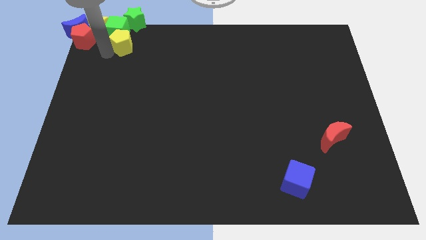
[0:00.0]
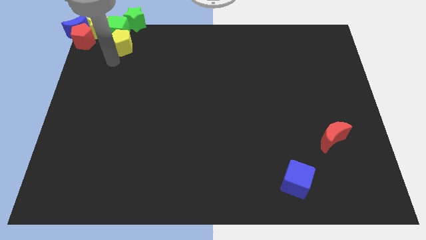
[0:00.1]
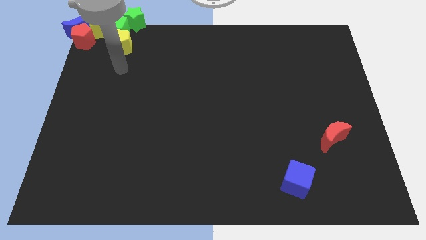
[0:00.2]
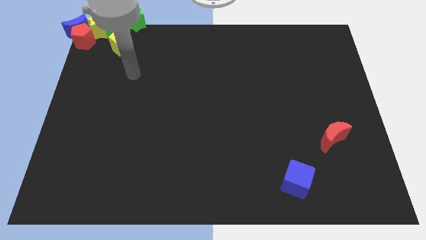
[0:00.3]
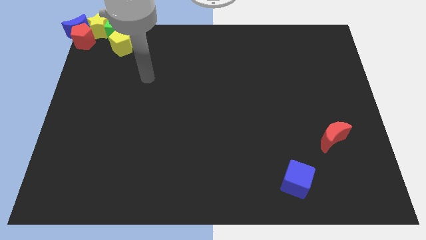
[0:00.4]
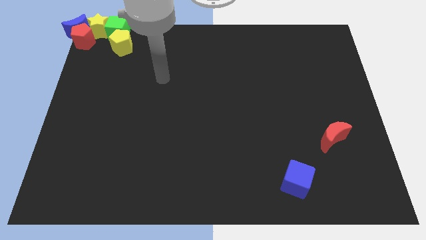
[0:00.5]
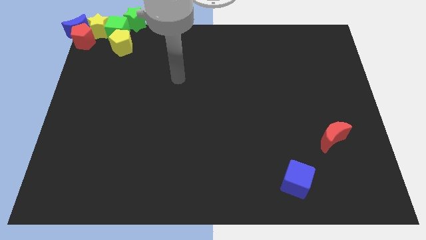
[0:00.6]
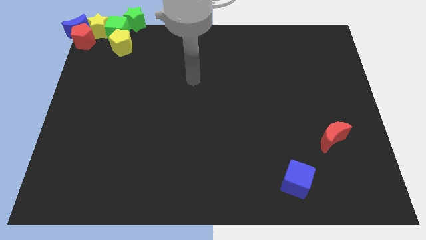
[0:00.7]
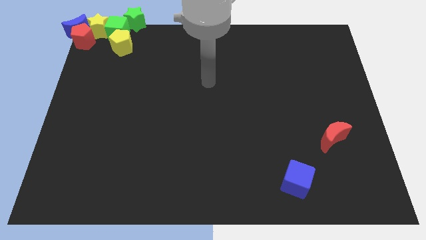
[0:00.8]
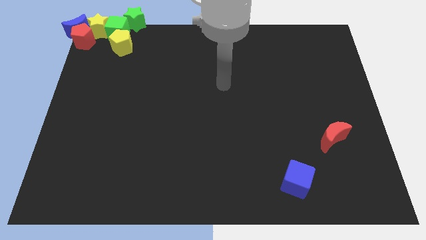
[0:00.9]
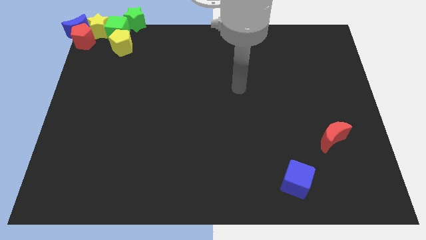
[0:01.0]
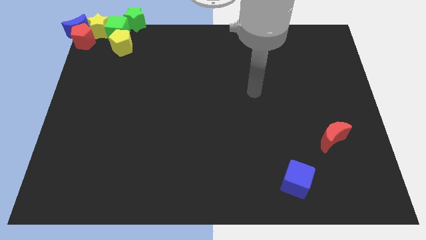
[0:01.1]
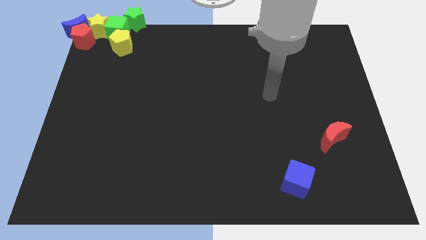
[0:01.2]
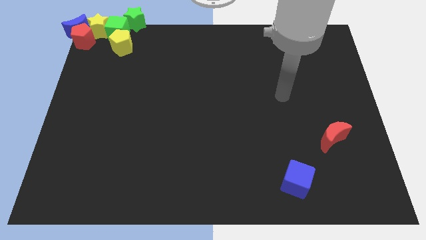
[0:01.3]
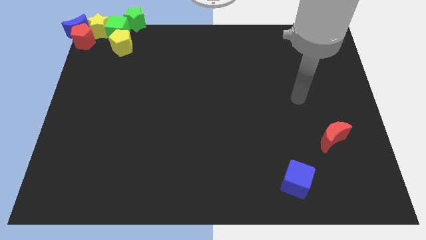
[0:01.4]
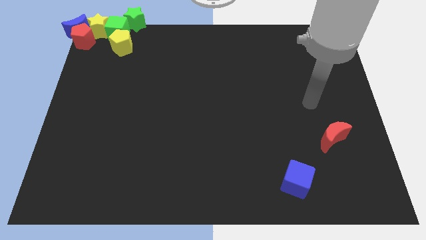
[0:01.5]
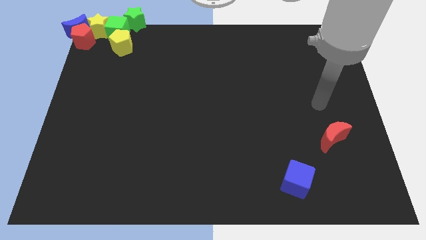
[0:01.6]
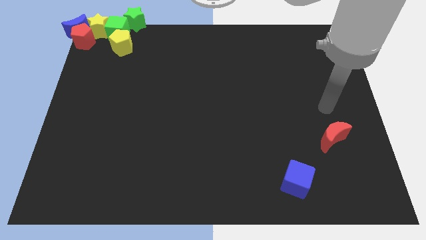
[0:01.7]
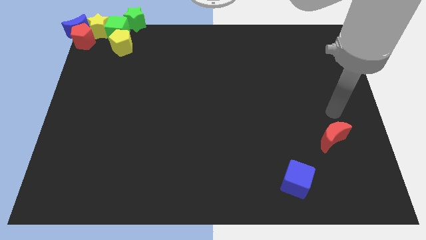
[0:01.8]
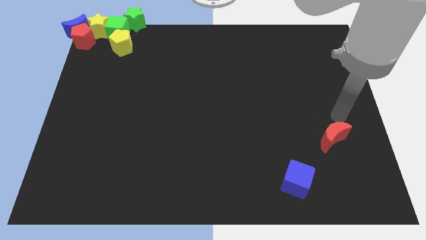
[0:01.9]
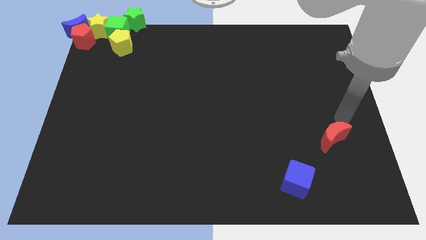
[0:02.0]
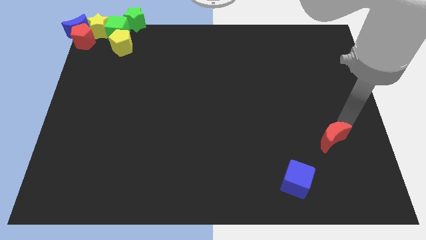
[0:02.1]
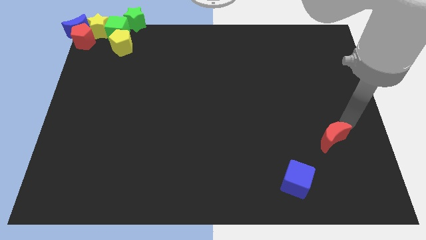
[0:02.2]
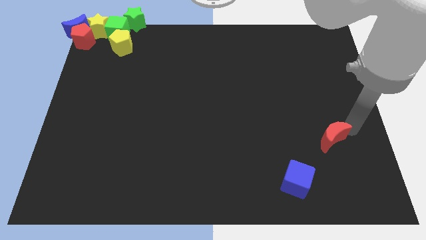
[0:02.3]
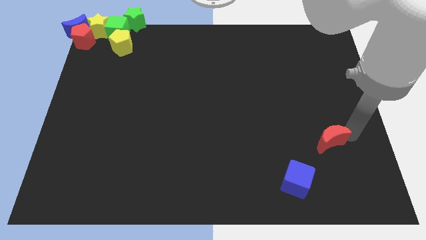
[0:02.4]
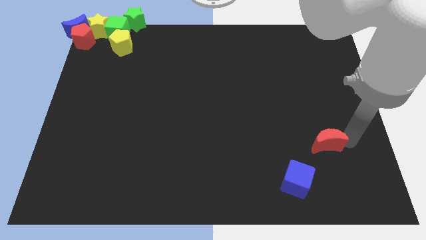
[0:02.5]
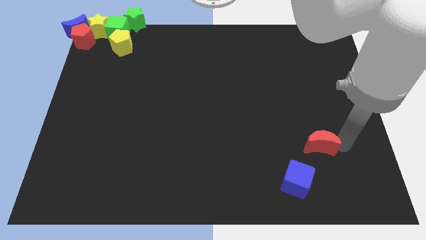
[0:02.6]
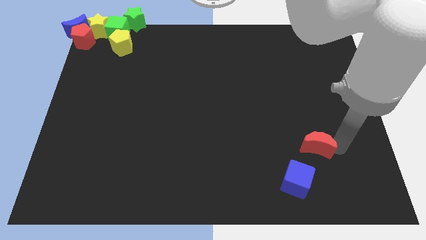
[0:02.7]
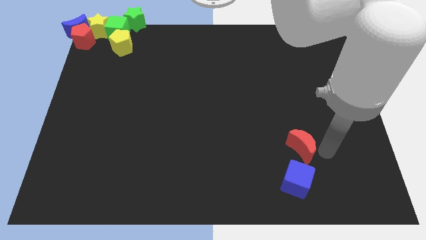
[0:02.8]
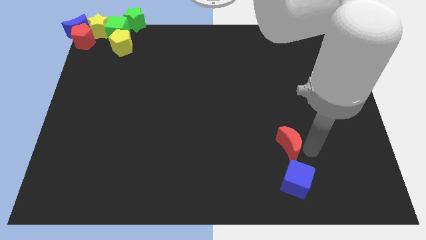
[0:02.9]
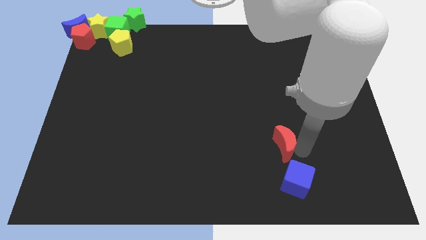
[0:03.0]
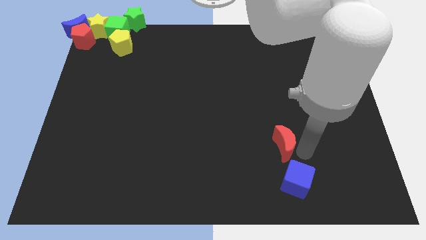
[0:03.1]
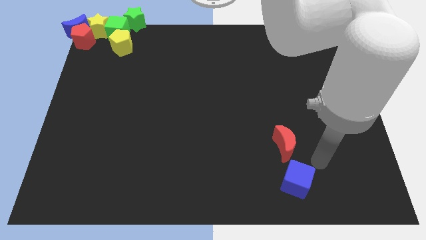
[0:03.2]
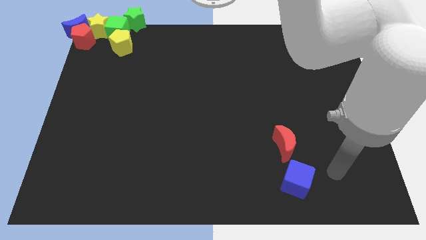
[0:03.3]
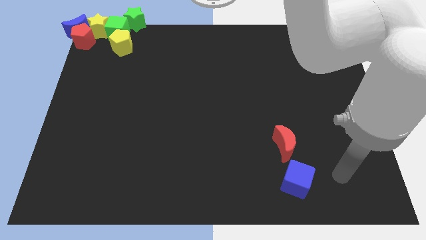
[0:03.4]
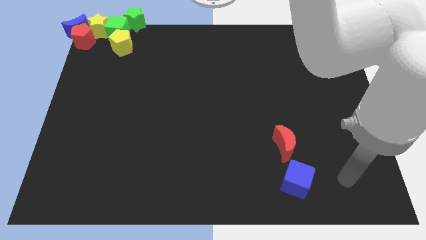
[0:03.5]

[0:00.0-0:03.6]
place the red moon at the top left side of blue cube

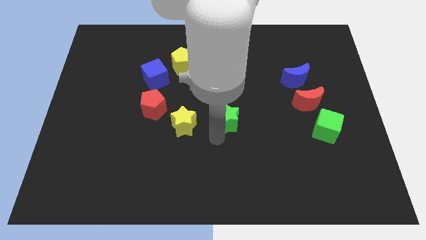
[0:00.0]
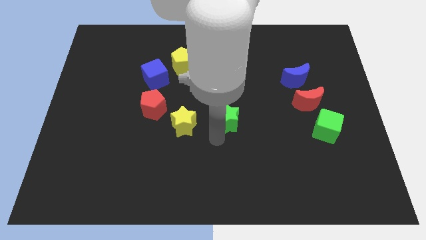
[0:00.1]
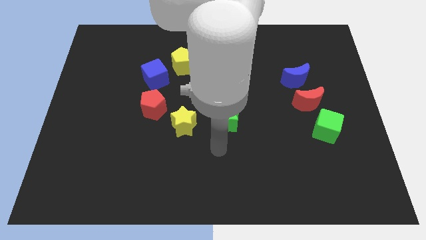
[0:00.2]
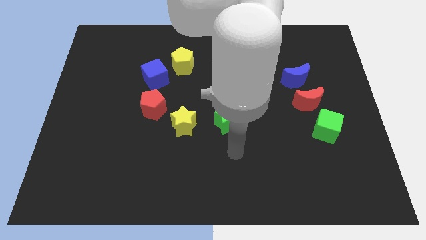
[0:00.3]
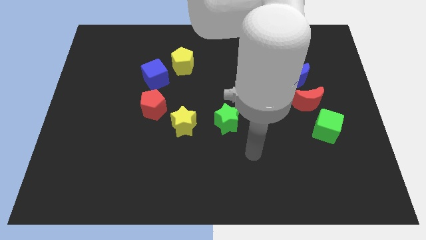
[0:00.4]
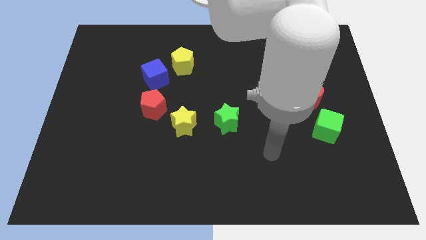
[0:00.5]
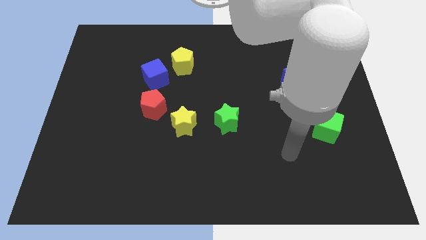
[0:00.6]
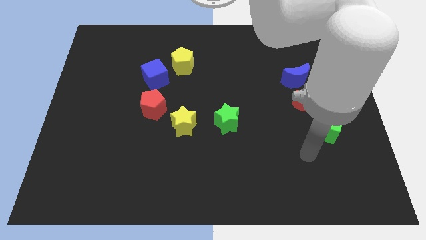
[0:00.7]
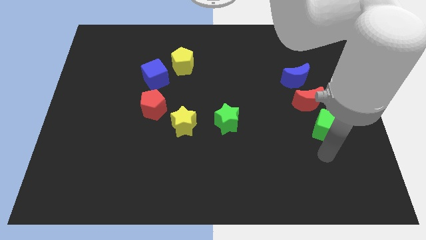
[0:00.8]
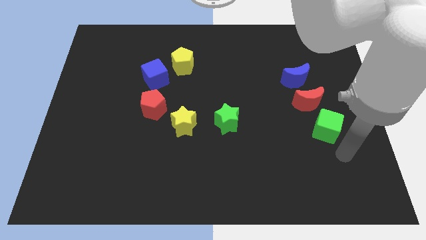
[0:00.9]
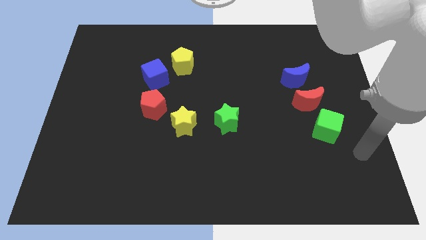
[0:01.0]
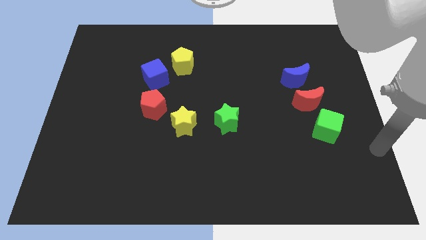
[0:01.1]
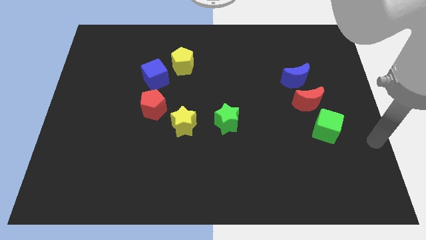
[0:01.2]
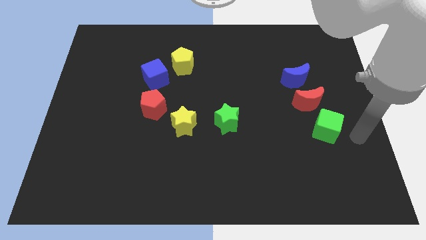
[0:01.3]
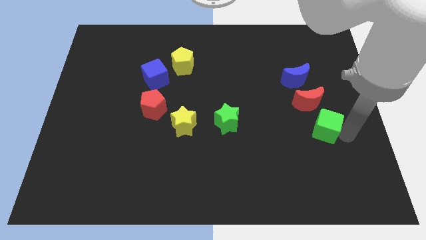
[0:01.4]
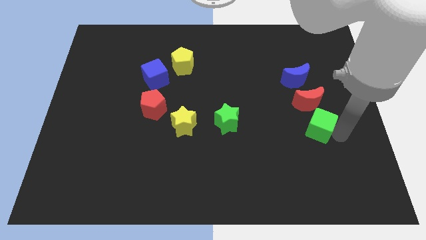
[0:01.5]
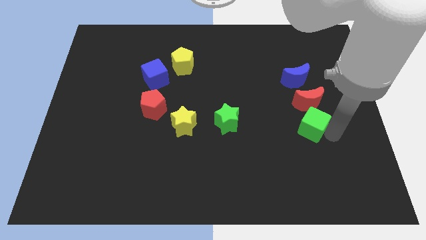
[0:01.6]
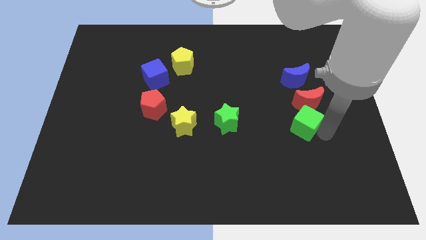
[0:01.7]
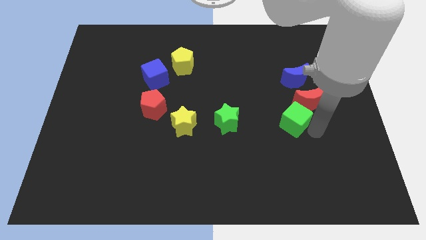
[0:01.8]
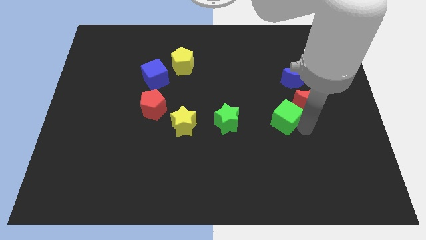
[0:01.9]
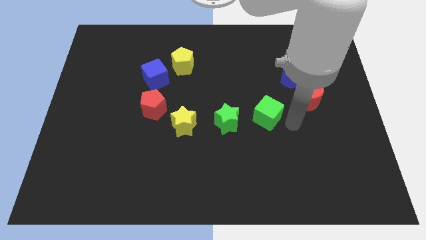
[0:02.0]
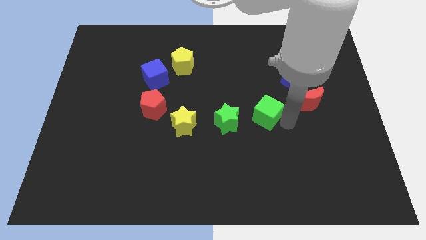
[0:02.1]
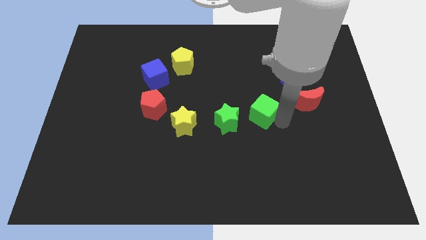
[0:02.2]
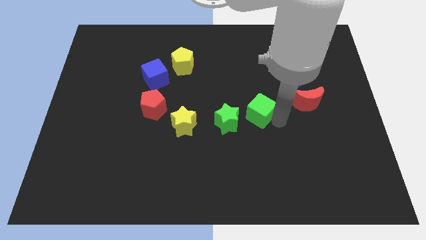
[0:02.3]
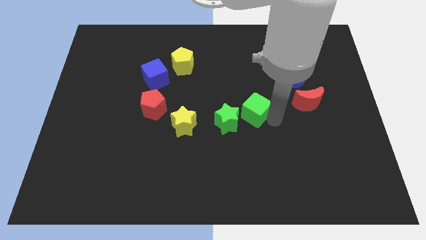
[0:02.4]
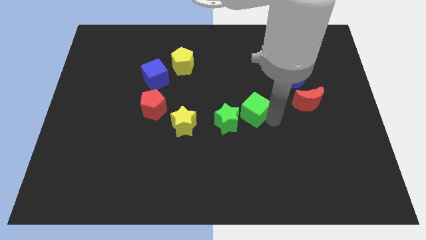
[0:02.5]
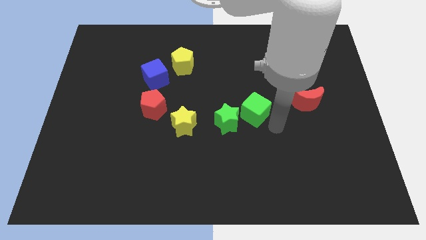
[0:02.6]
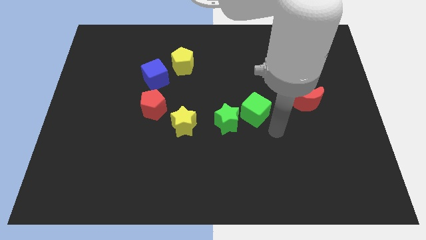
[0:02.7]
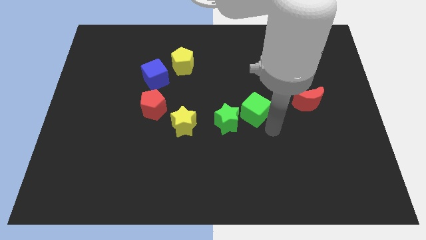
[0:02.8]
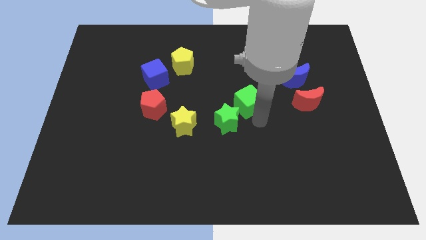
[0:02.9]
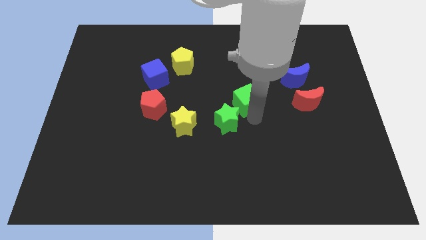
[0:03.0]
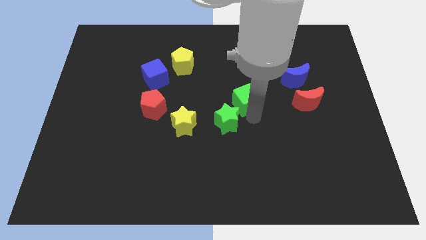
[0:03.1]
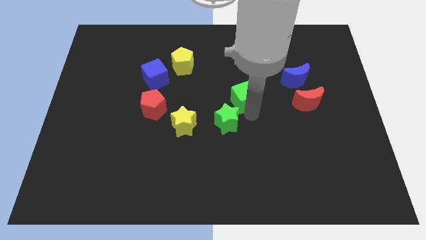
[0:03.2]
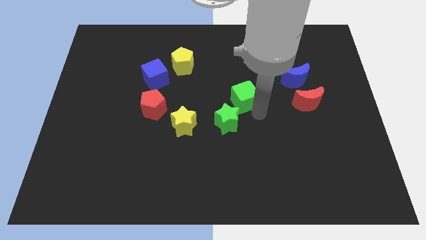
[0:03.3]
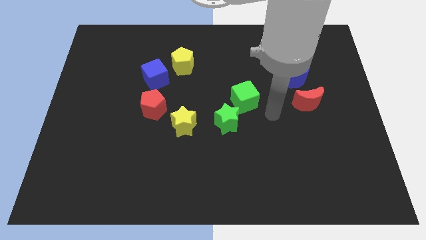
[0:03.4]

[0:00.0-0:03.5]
move the green cube parallel to the red crescent

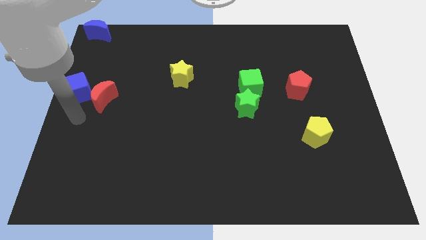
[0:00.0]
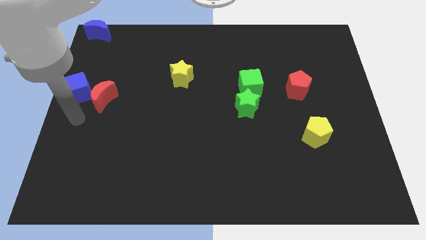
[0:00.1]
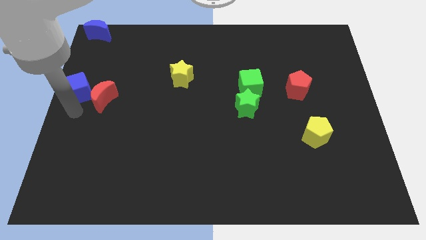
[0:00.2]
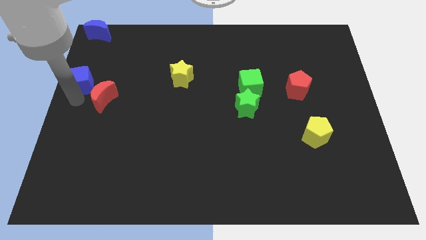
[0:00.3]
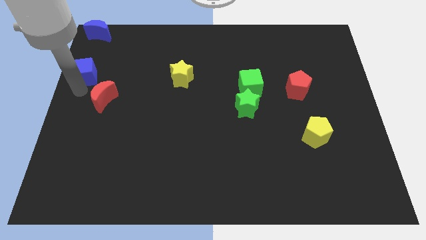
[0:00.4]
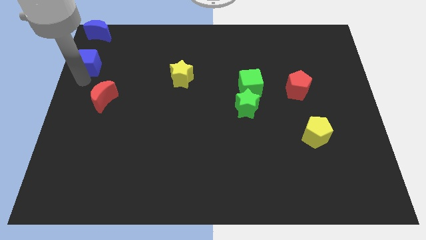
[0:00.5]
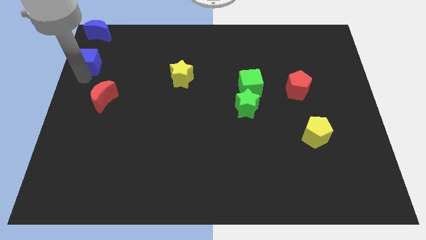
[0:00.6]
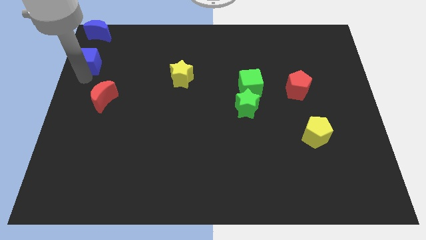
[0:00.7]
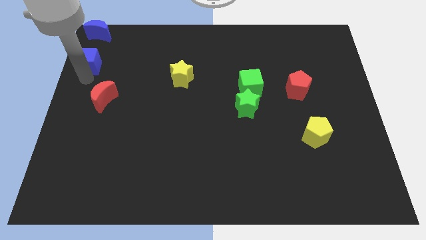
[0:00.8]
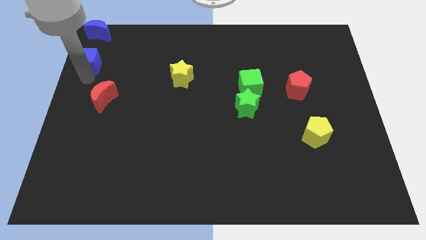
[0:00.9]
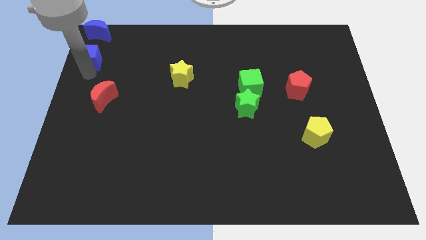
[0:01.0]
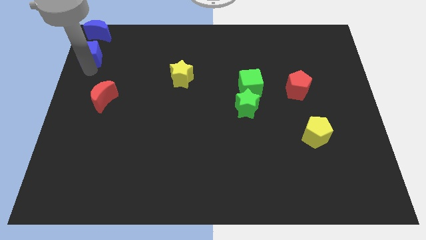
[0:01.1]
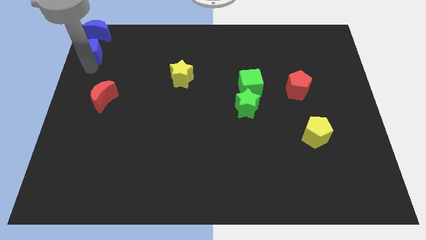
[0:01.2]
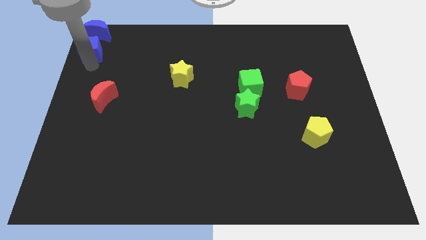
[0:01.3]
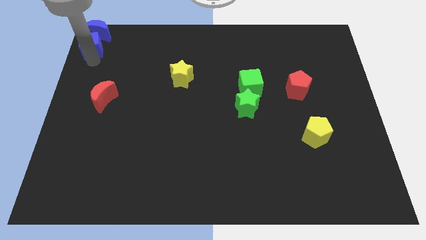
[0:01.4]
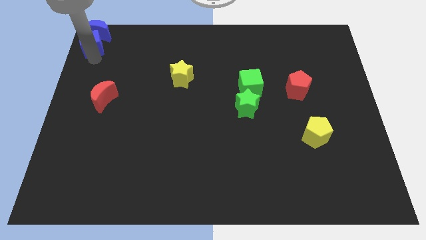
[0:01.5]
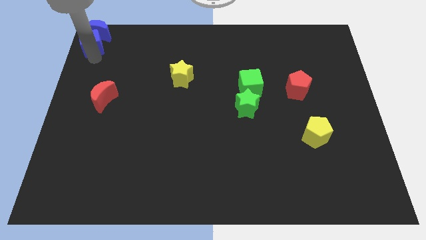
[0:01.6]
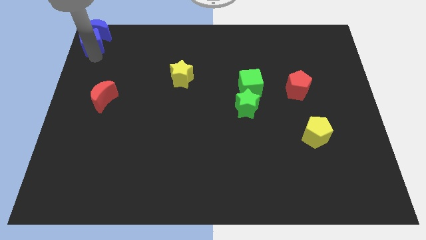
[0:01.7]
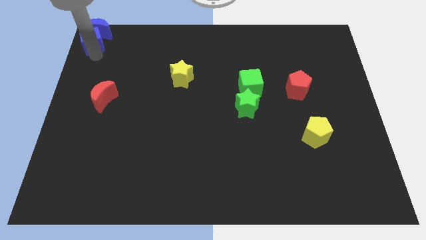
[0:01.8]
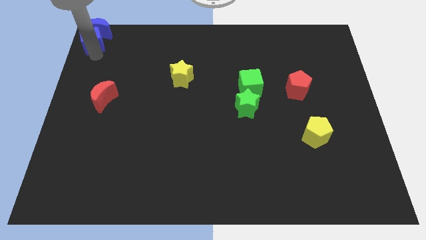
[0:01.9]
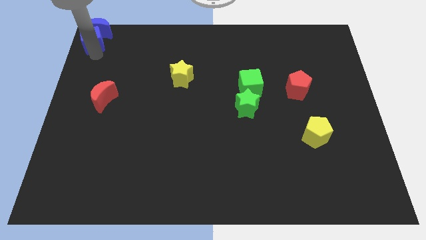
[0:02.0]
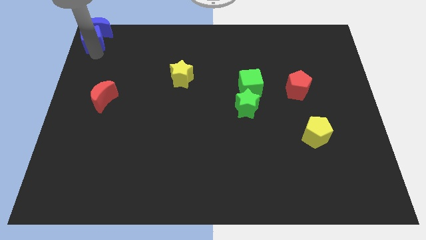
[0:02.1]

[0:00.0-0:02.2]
push the blue cube to the bottom of the blue crescent
